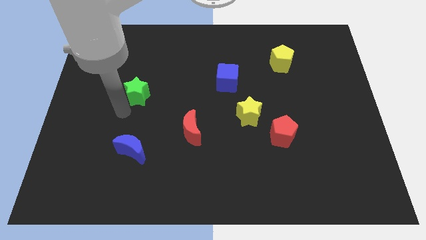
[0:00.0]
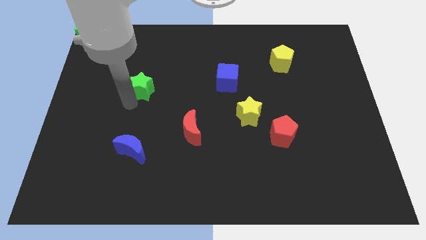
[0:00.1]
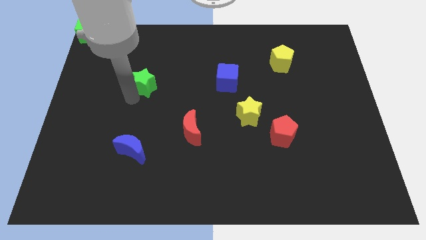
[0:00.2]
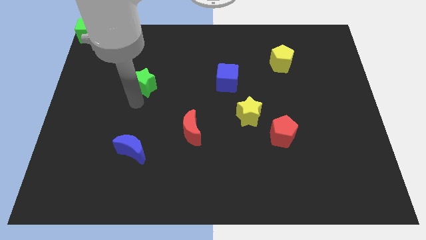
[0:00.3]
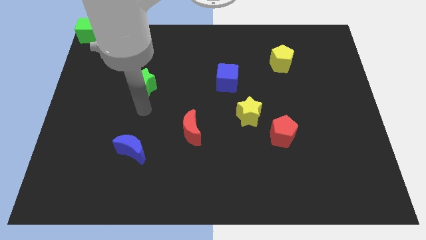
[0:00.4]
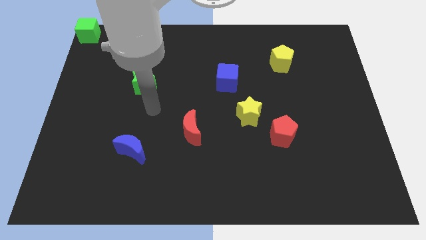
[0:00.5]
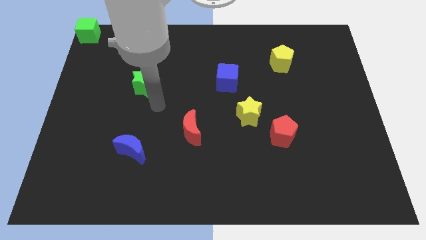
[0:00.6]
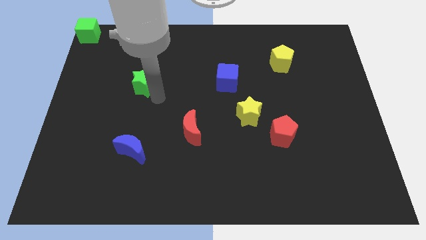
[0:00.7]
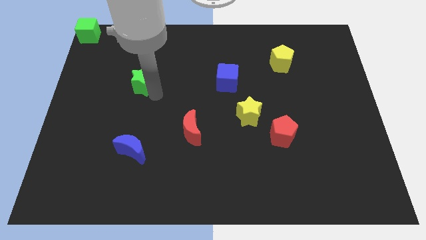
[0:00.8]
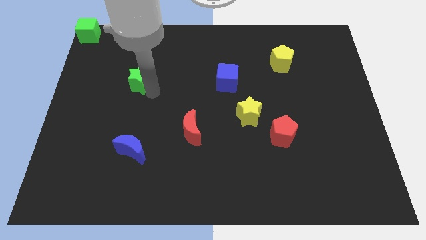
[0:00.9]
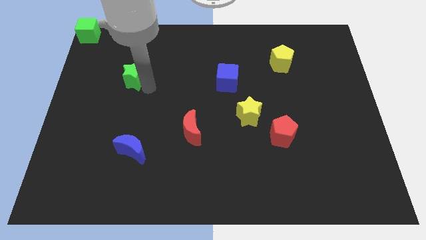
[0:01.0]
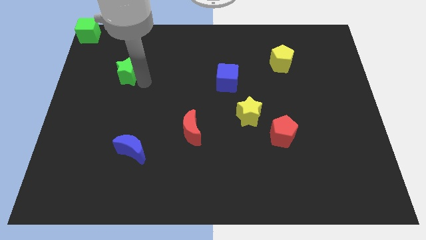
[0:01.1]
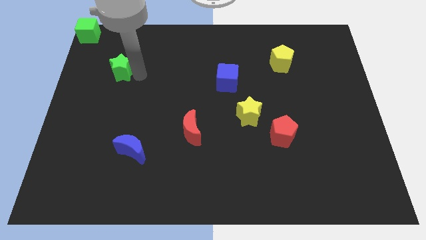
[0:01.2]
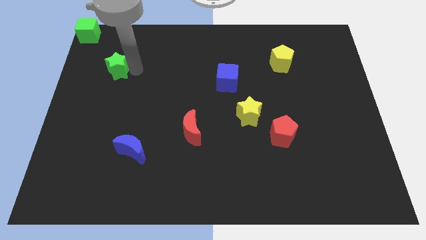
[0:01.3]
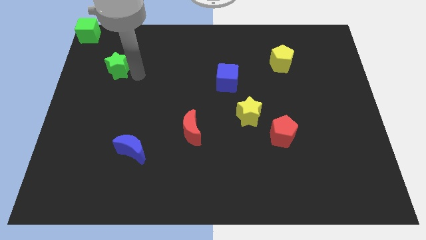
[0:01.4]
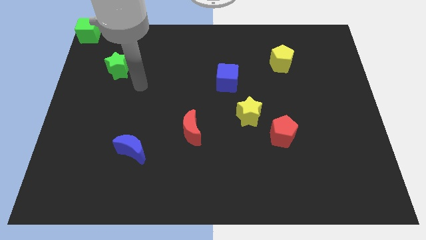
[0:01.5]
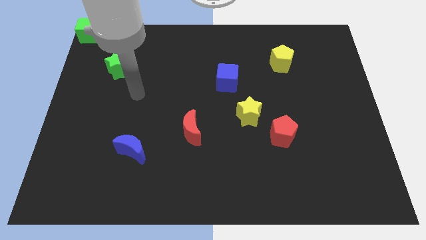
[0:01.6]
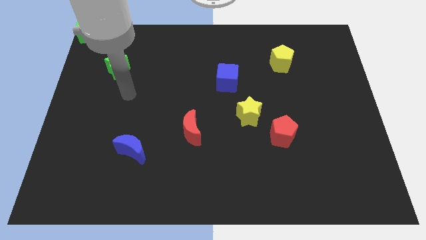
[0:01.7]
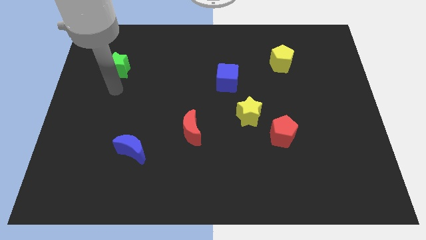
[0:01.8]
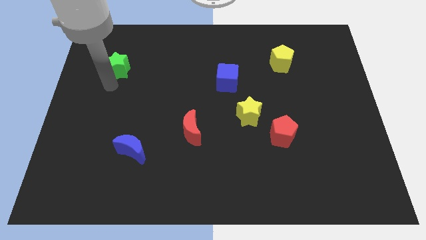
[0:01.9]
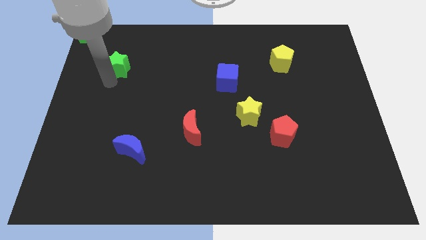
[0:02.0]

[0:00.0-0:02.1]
place the green star below the green cube

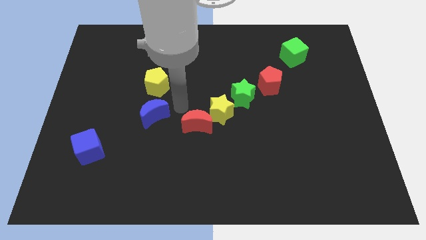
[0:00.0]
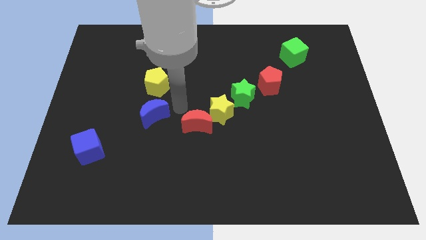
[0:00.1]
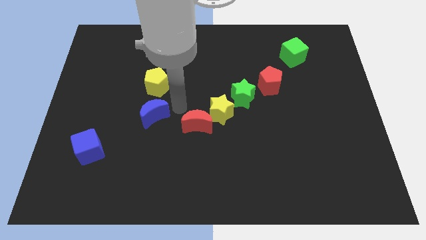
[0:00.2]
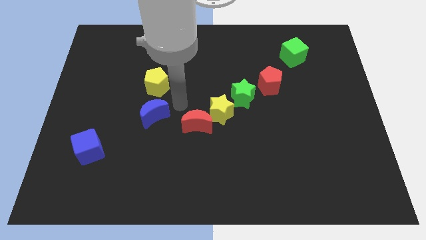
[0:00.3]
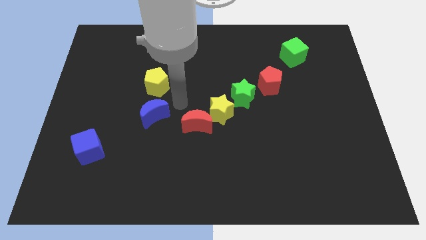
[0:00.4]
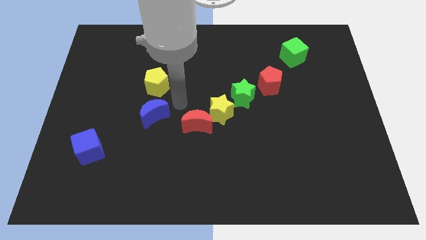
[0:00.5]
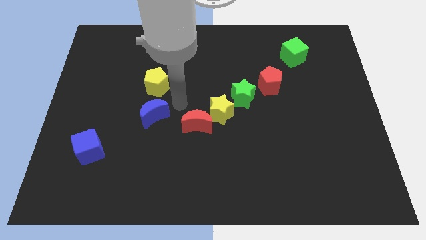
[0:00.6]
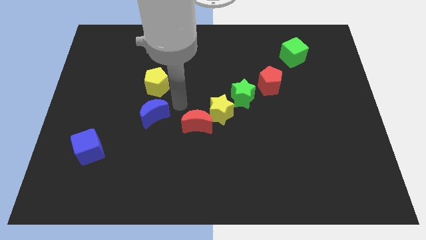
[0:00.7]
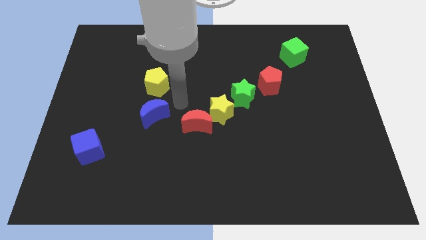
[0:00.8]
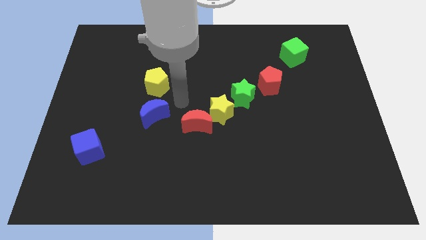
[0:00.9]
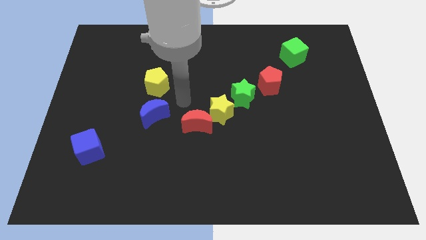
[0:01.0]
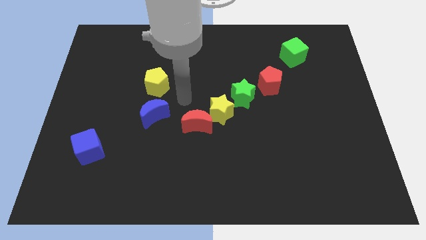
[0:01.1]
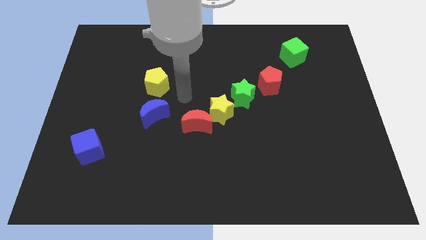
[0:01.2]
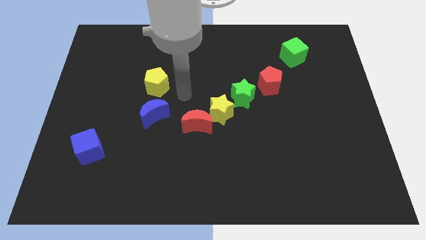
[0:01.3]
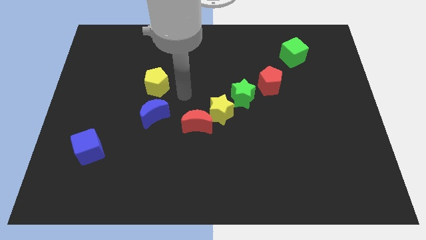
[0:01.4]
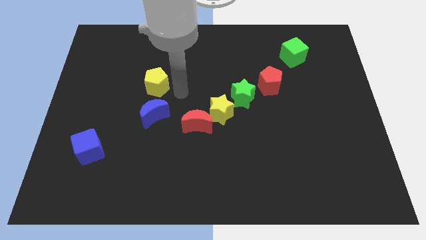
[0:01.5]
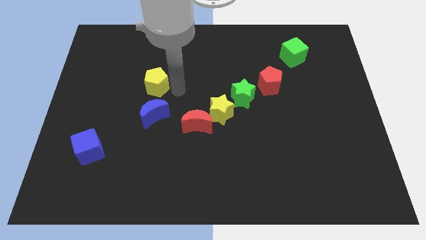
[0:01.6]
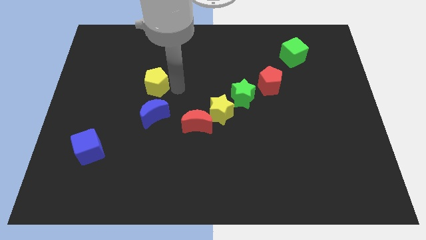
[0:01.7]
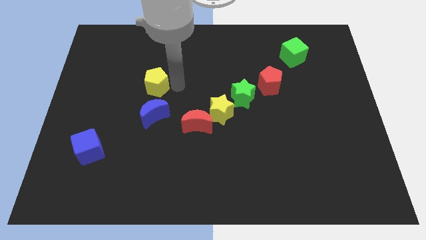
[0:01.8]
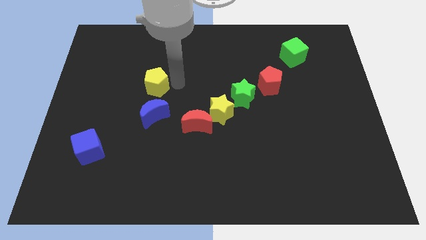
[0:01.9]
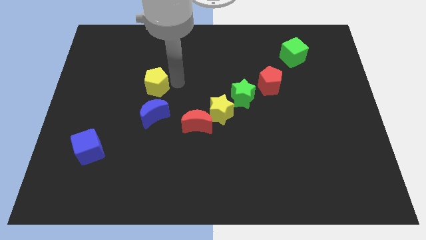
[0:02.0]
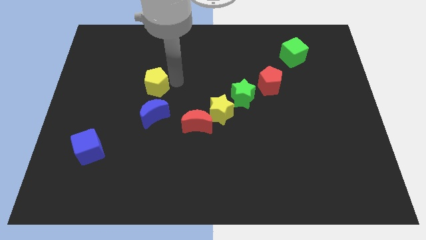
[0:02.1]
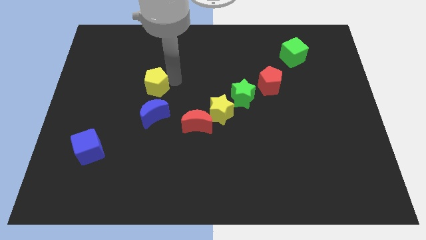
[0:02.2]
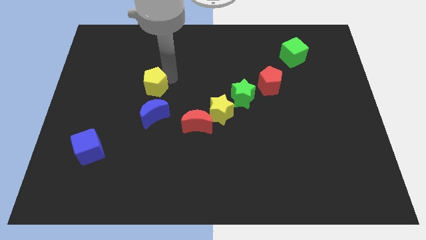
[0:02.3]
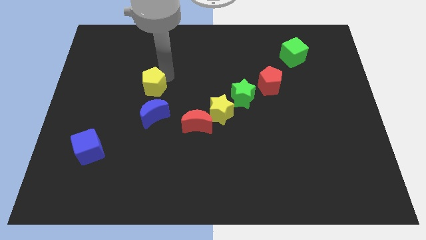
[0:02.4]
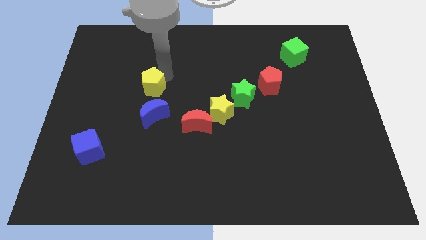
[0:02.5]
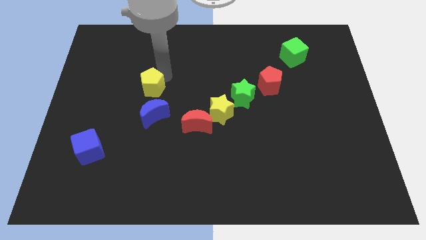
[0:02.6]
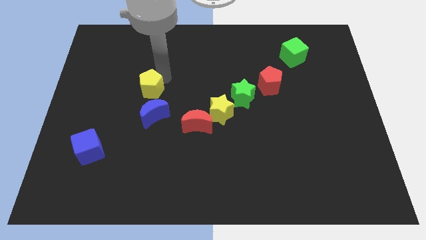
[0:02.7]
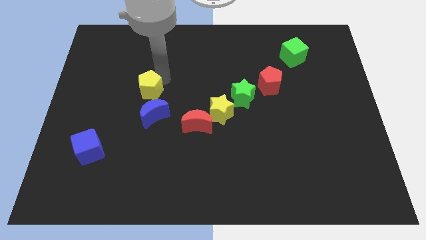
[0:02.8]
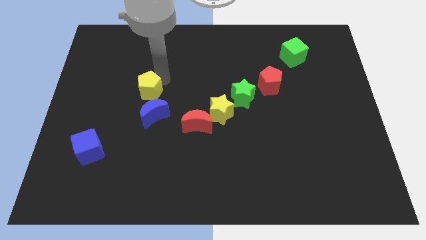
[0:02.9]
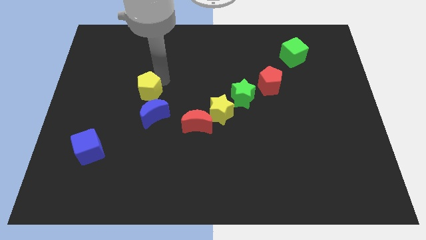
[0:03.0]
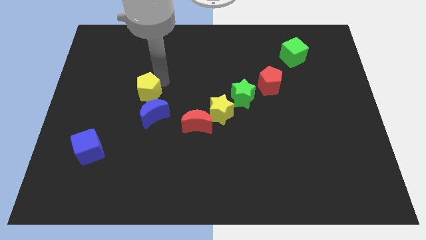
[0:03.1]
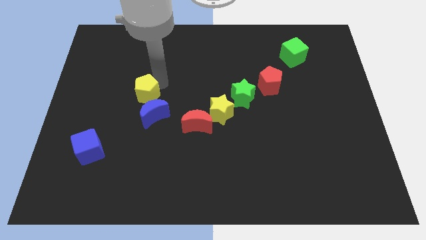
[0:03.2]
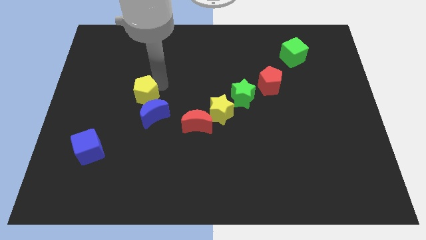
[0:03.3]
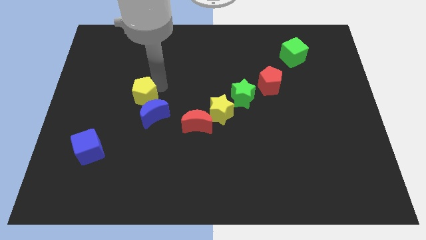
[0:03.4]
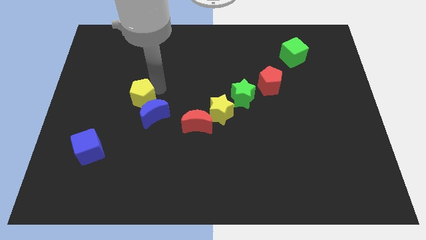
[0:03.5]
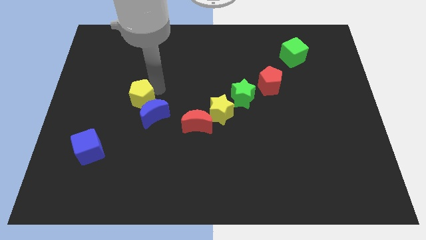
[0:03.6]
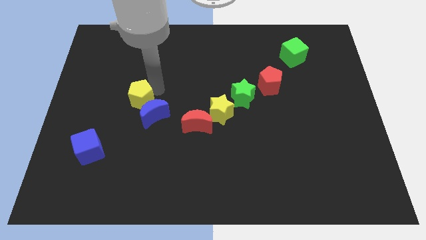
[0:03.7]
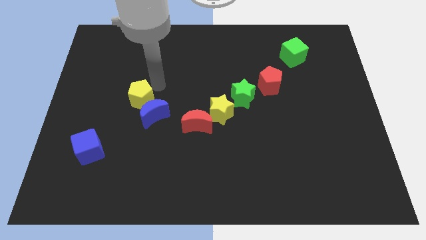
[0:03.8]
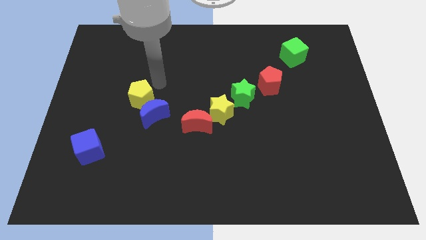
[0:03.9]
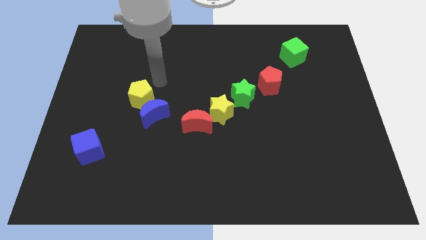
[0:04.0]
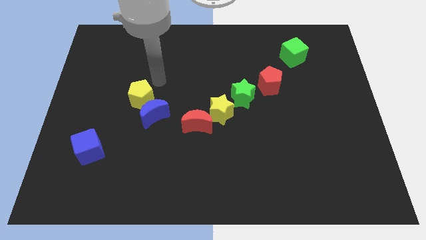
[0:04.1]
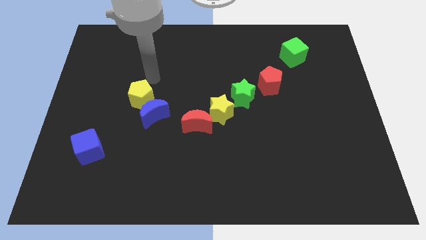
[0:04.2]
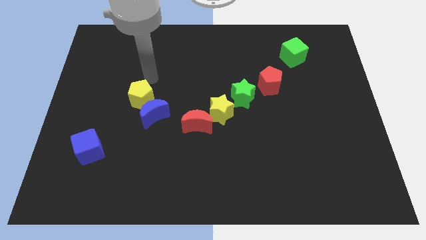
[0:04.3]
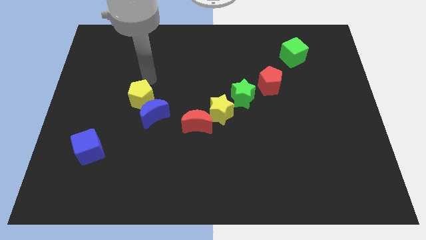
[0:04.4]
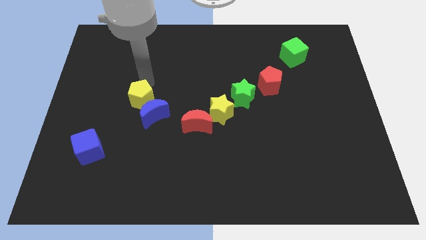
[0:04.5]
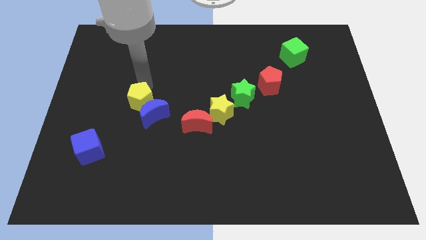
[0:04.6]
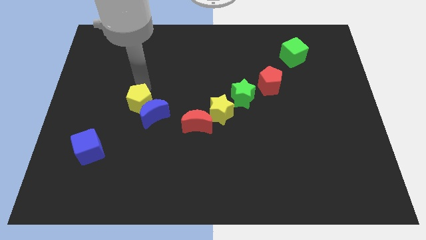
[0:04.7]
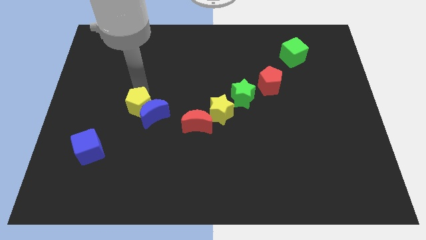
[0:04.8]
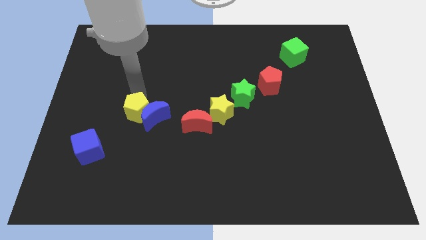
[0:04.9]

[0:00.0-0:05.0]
move the yellow pentagon into the blue crescent

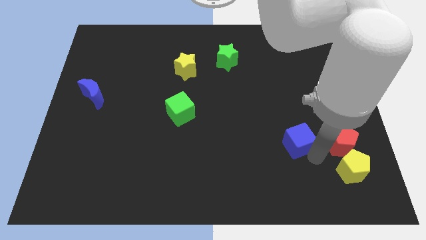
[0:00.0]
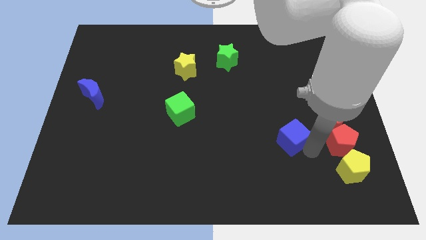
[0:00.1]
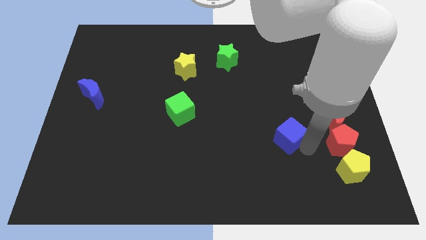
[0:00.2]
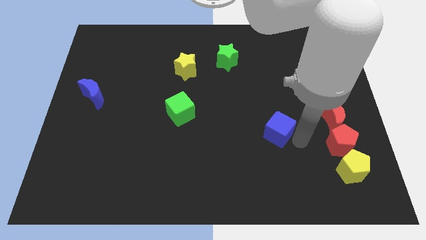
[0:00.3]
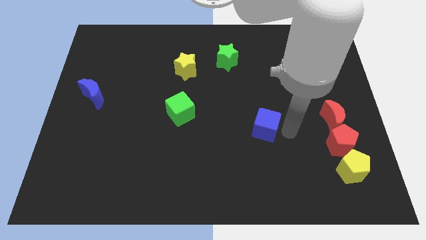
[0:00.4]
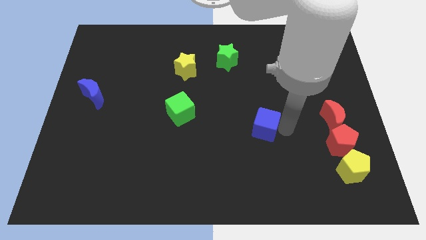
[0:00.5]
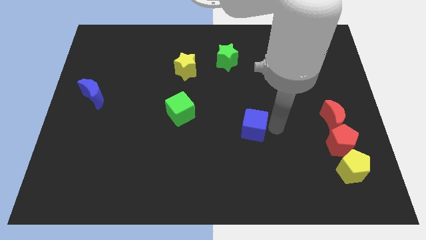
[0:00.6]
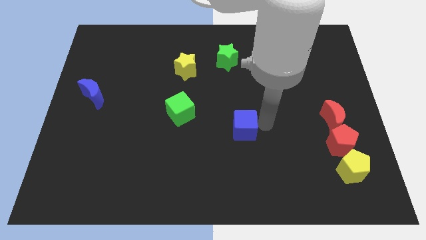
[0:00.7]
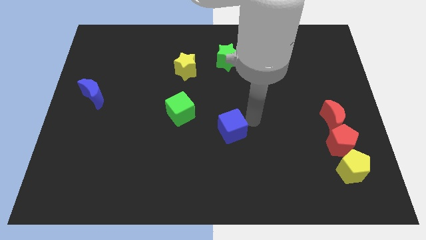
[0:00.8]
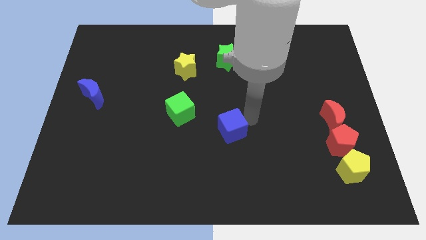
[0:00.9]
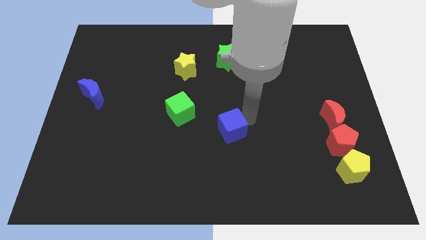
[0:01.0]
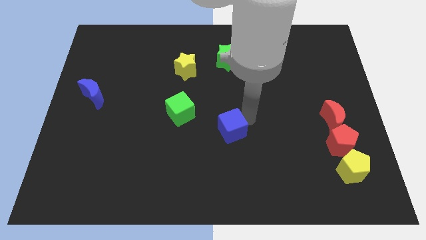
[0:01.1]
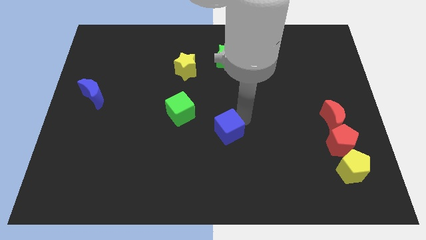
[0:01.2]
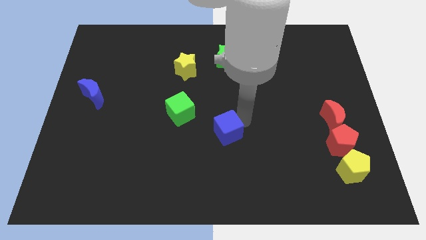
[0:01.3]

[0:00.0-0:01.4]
move the blue cube towards the right side of the green cube

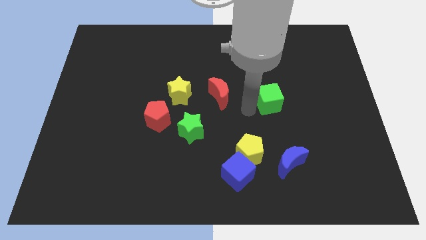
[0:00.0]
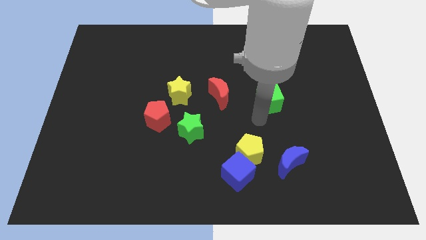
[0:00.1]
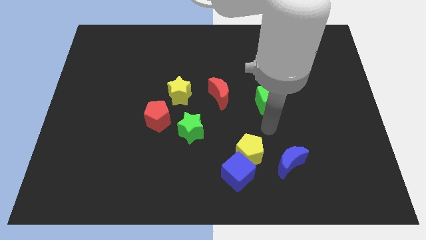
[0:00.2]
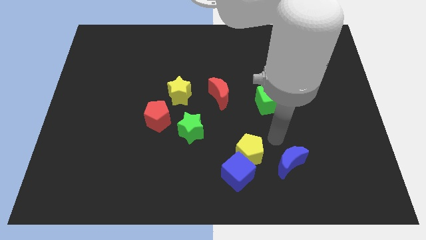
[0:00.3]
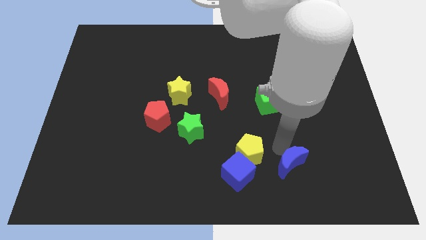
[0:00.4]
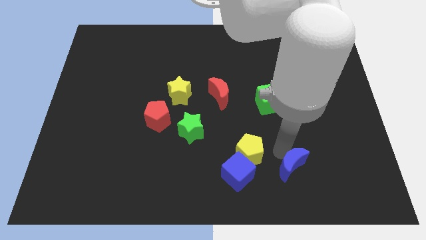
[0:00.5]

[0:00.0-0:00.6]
place your arm diagonal to the blue moon
